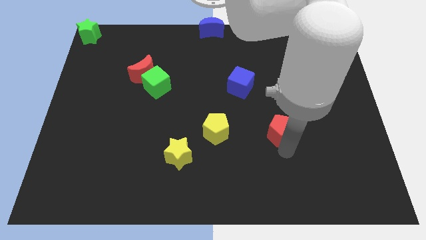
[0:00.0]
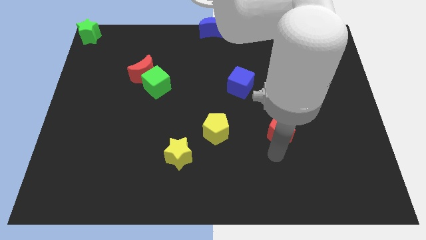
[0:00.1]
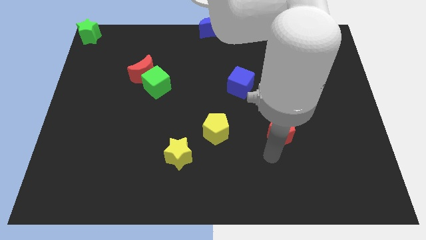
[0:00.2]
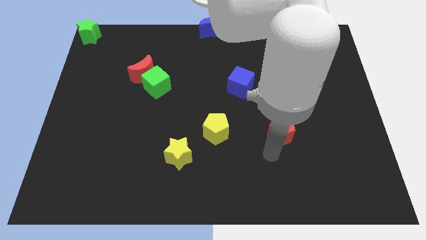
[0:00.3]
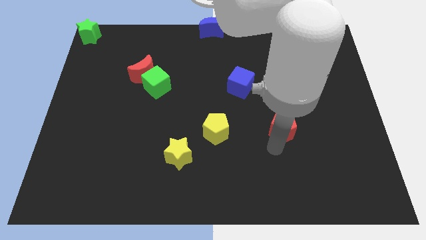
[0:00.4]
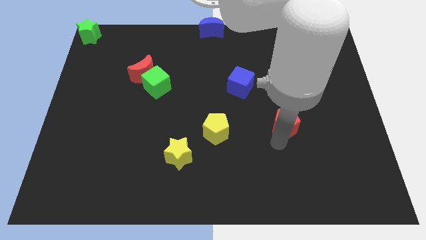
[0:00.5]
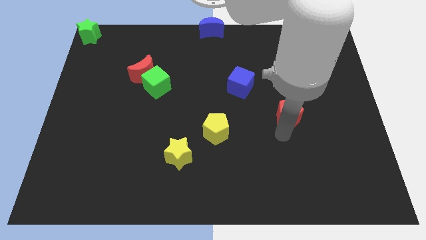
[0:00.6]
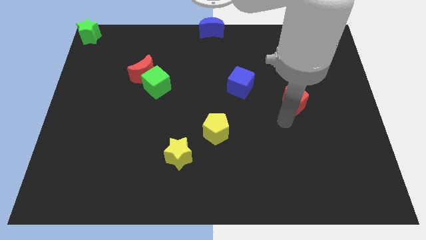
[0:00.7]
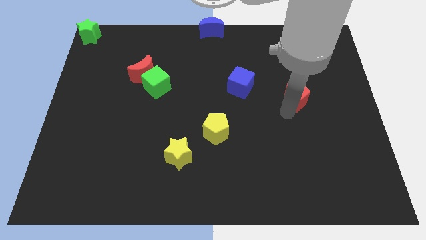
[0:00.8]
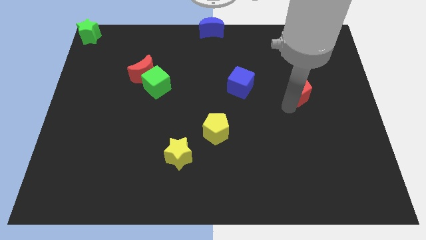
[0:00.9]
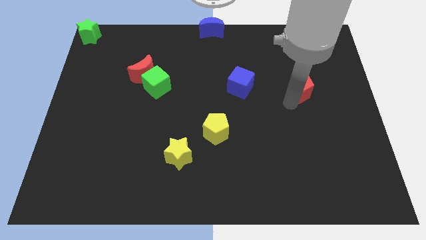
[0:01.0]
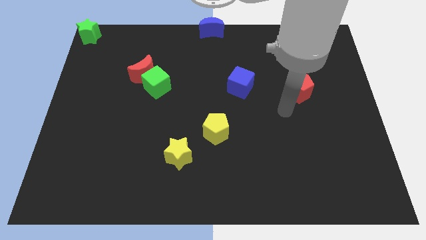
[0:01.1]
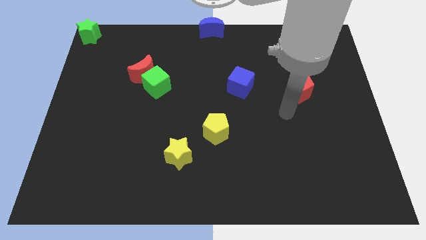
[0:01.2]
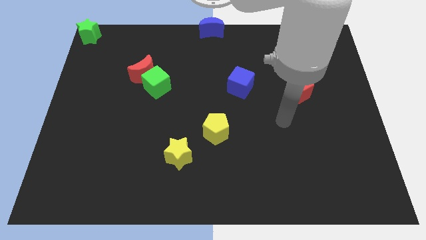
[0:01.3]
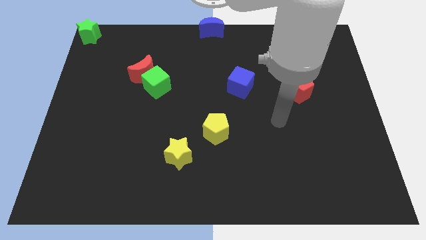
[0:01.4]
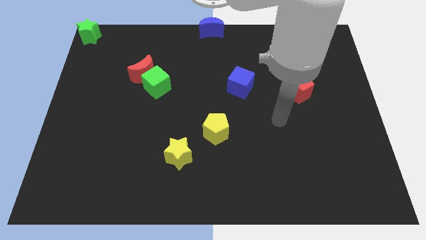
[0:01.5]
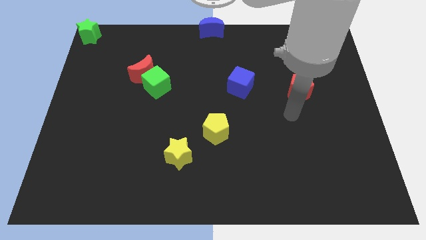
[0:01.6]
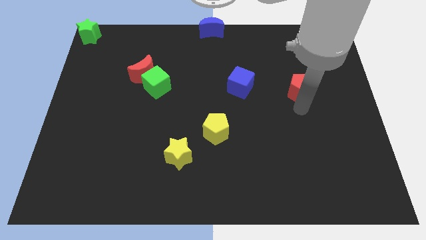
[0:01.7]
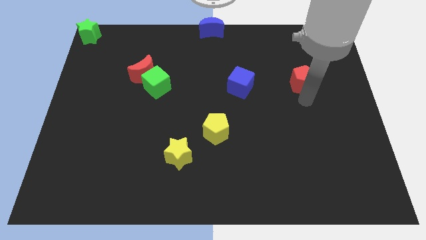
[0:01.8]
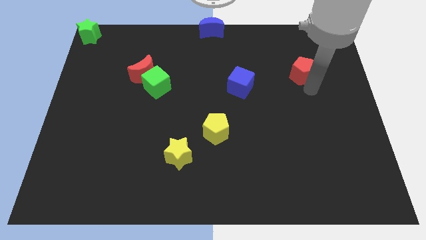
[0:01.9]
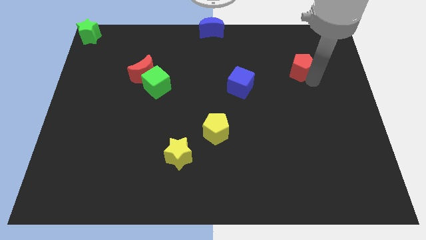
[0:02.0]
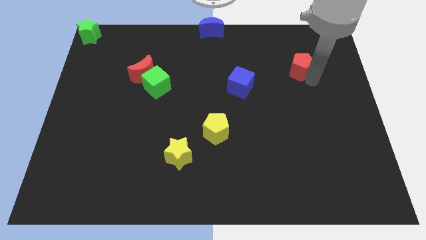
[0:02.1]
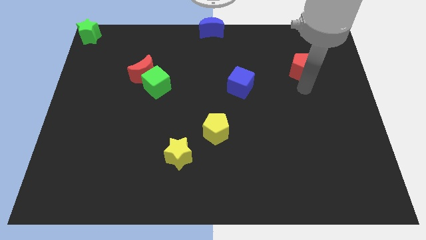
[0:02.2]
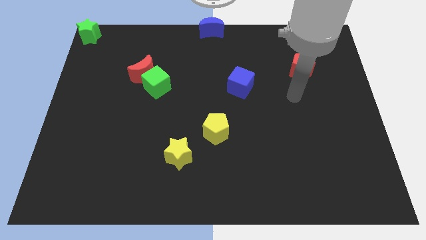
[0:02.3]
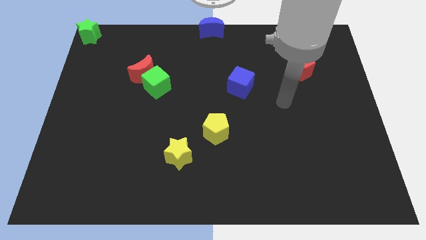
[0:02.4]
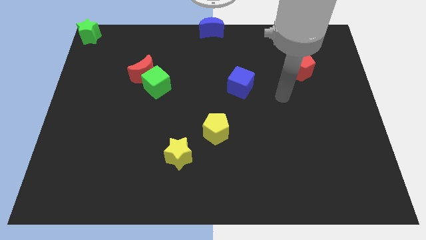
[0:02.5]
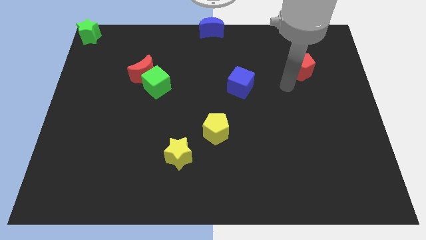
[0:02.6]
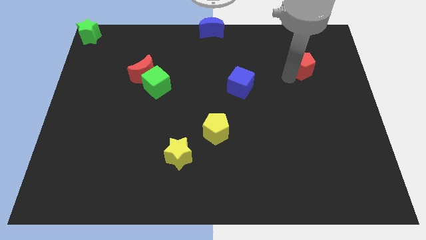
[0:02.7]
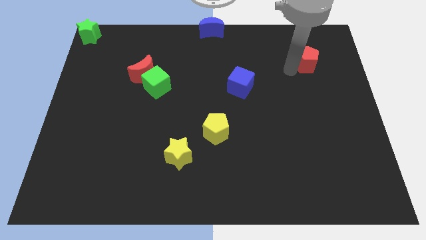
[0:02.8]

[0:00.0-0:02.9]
place the red pentagon diagonal to the blue cube

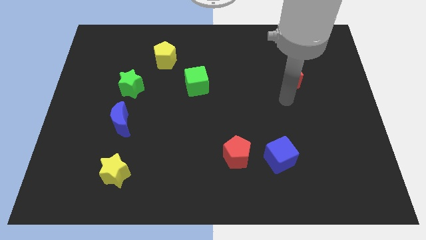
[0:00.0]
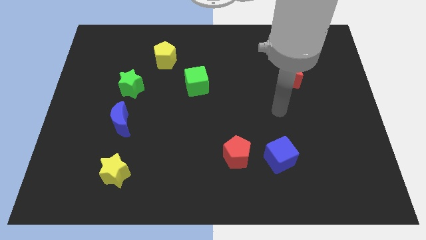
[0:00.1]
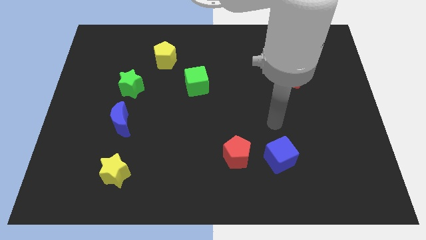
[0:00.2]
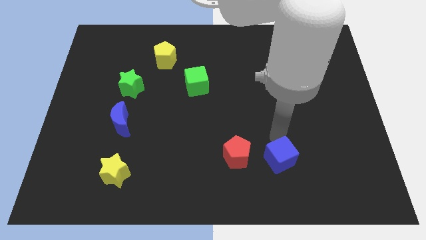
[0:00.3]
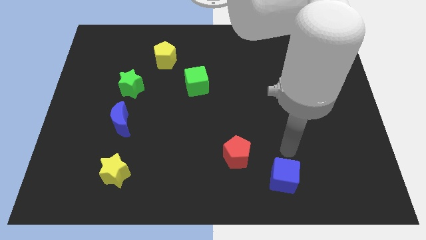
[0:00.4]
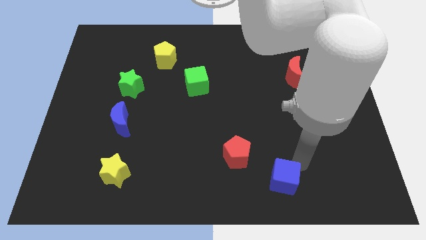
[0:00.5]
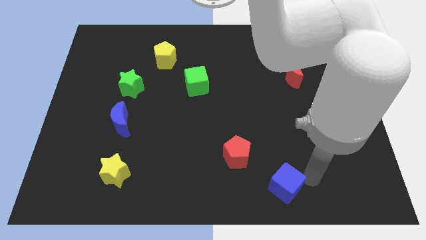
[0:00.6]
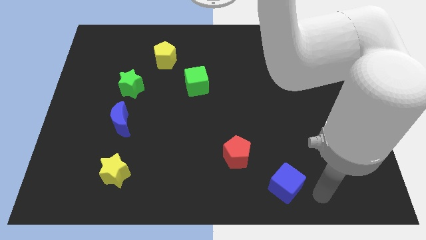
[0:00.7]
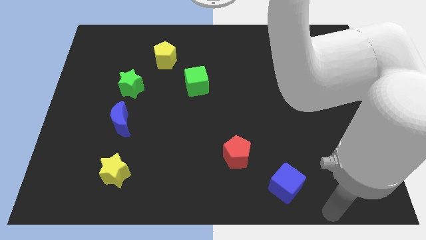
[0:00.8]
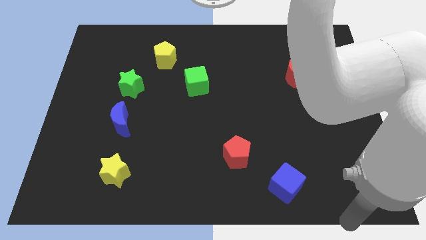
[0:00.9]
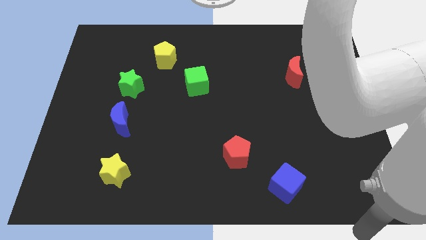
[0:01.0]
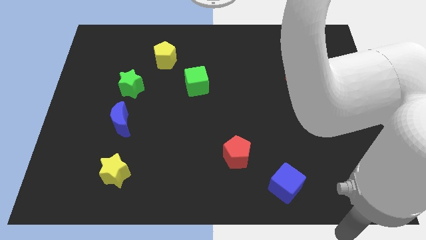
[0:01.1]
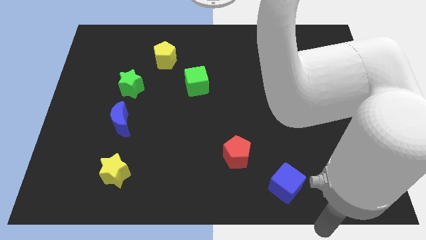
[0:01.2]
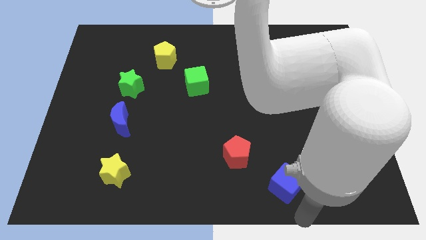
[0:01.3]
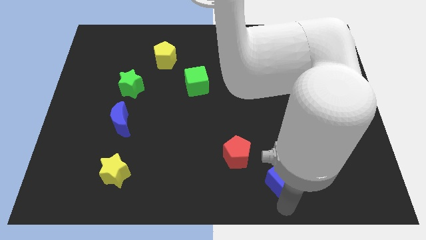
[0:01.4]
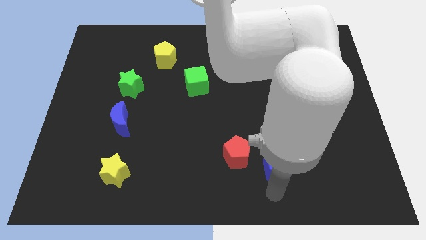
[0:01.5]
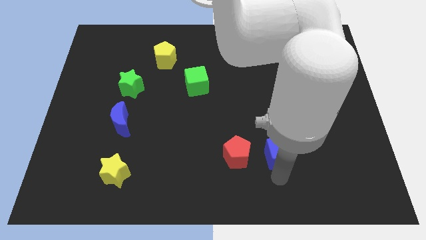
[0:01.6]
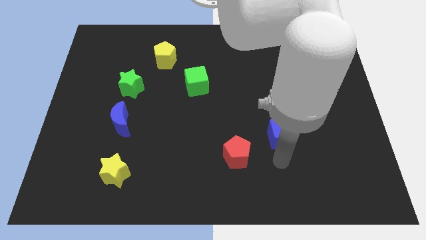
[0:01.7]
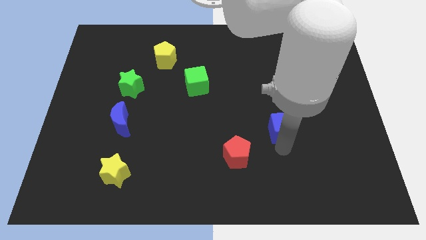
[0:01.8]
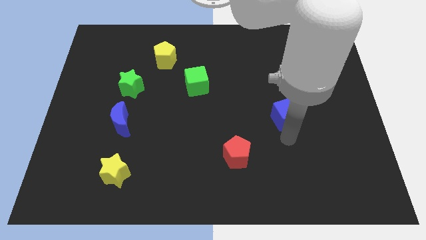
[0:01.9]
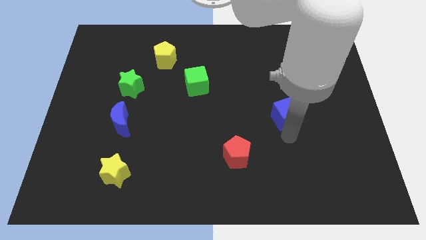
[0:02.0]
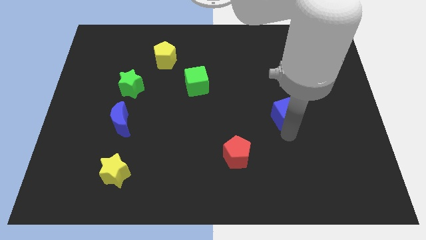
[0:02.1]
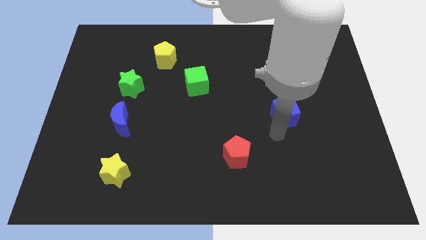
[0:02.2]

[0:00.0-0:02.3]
place the blue cube to the top right of the red pentagon

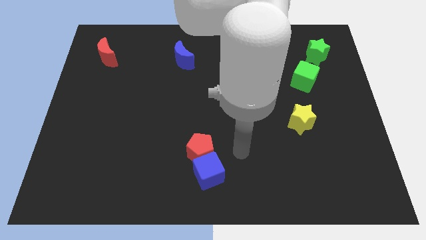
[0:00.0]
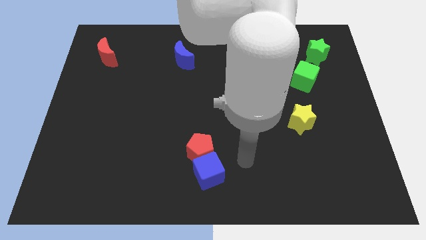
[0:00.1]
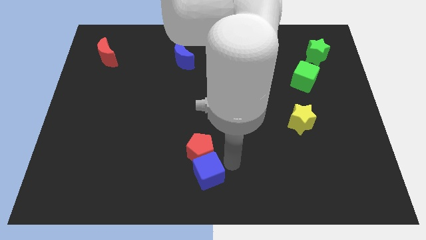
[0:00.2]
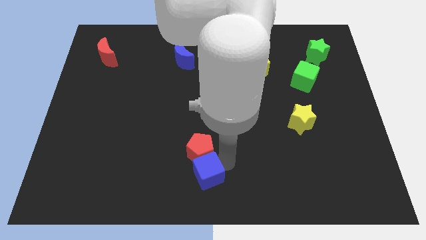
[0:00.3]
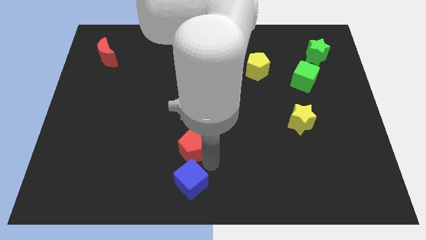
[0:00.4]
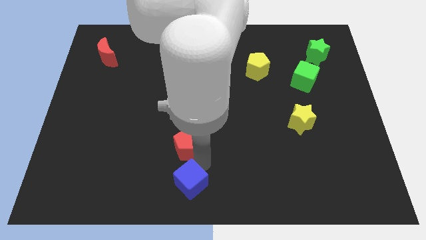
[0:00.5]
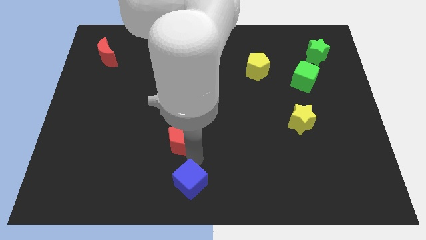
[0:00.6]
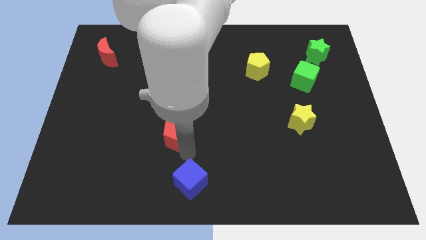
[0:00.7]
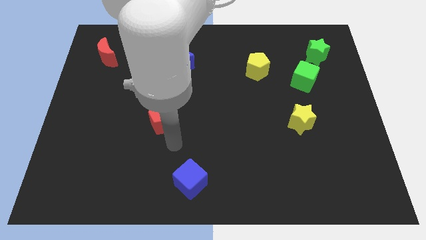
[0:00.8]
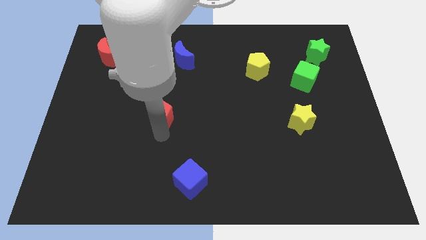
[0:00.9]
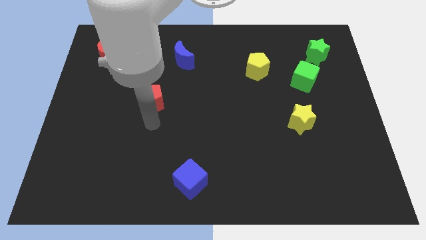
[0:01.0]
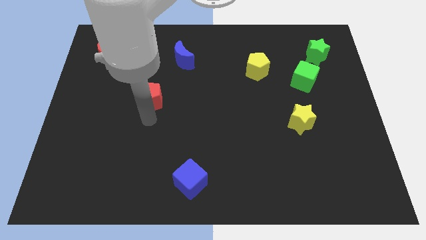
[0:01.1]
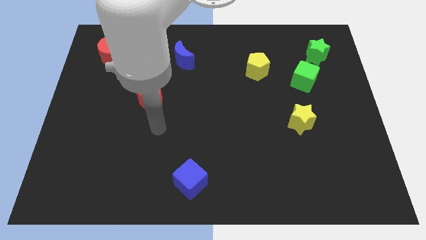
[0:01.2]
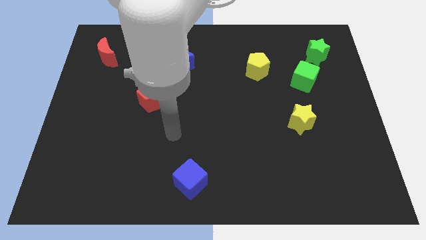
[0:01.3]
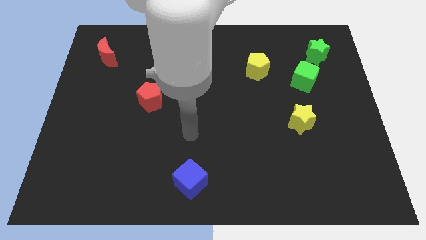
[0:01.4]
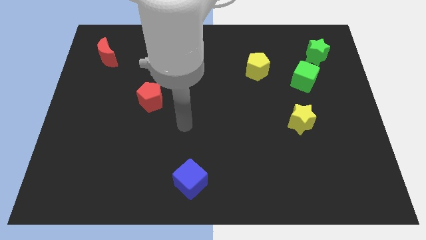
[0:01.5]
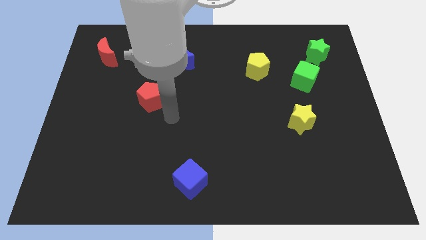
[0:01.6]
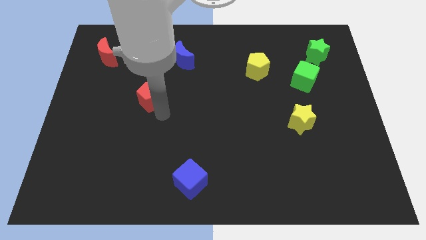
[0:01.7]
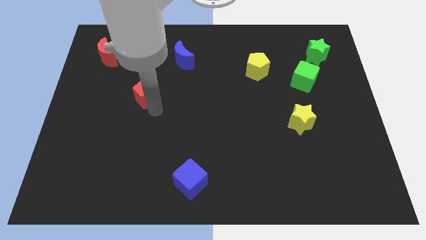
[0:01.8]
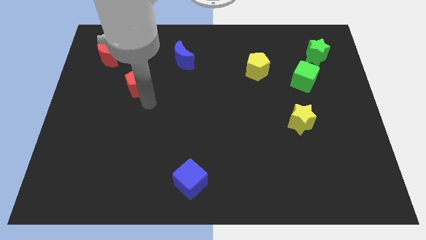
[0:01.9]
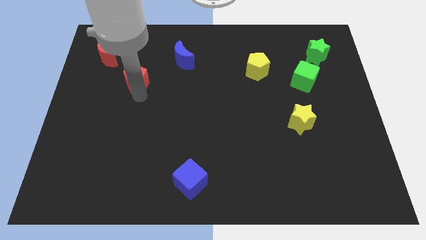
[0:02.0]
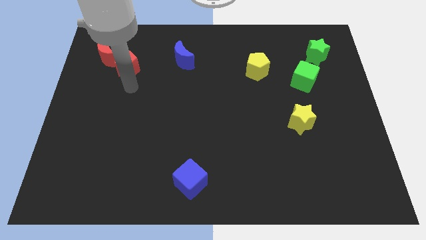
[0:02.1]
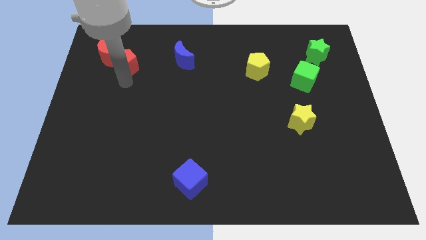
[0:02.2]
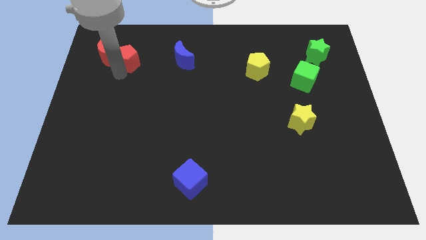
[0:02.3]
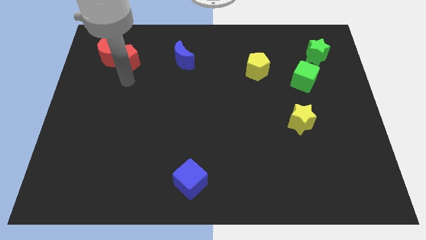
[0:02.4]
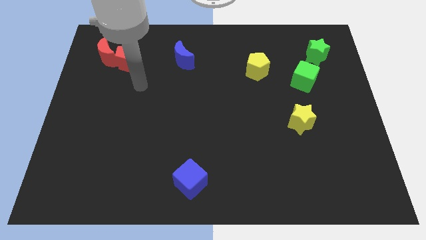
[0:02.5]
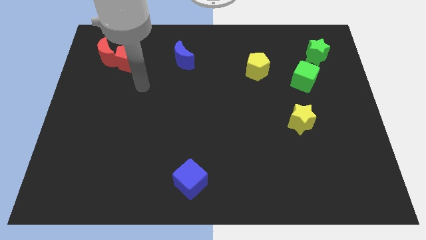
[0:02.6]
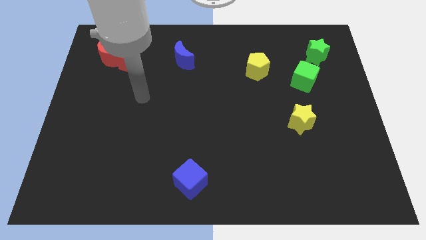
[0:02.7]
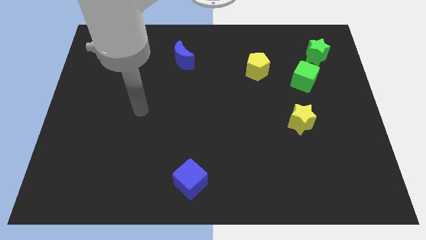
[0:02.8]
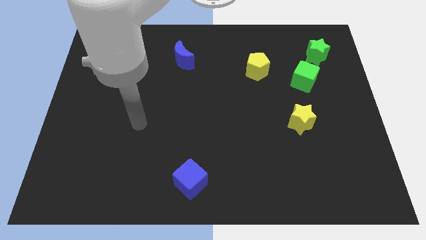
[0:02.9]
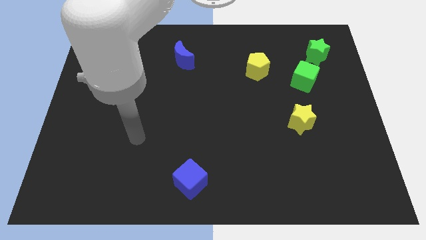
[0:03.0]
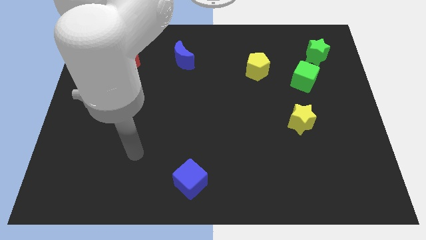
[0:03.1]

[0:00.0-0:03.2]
move the red pentagon to the right side of the red crescent

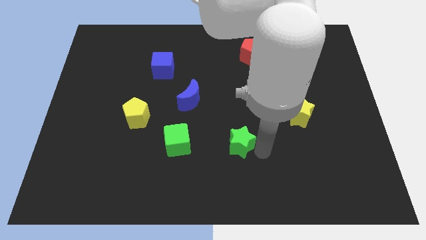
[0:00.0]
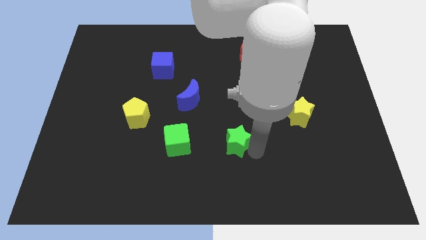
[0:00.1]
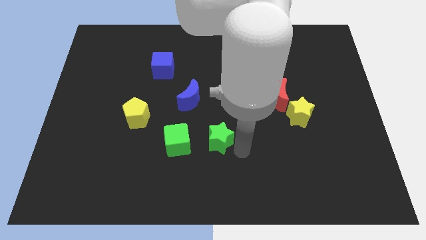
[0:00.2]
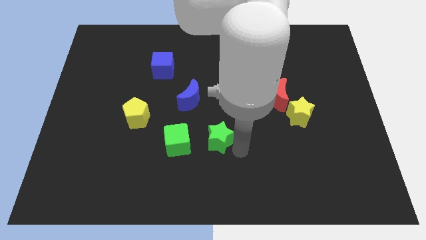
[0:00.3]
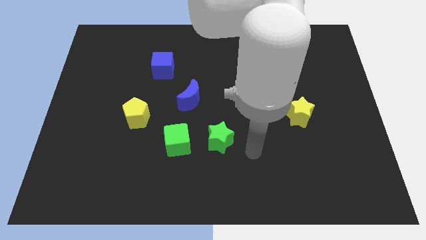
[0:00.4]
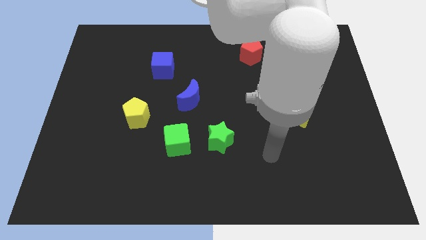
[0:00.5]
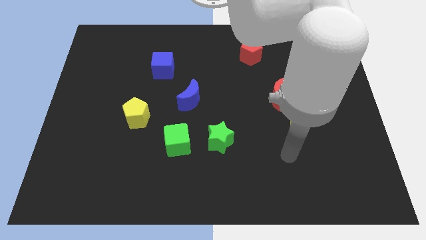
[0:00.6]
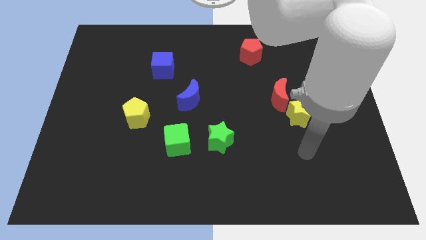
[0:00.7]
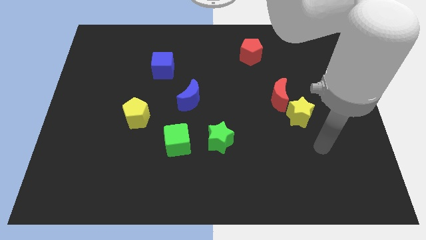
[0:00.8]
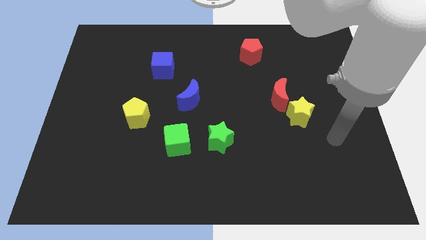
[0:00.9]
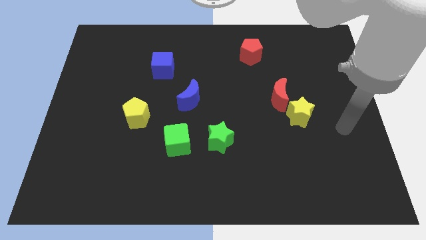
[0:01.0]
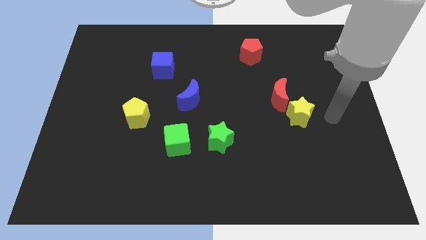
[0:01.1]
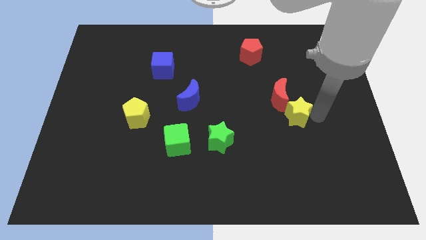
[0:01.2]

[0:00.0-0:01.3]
slide your arm right to the yellow star
